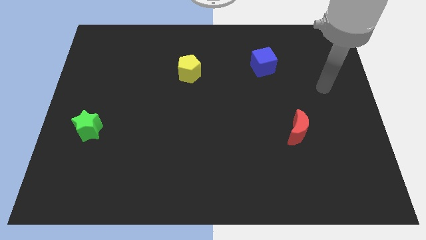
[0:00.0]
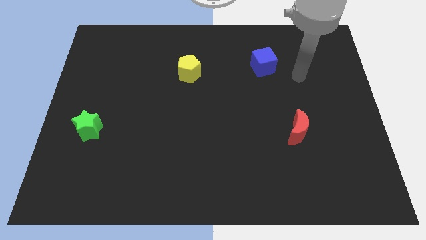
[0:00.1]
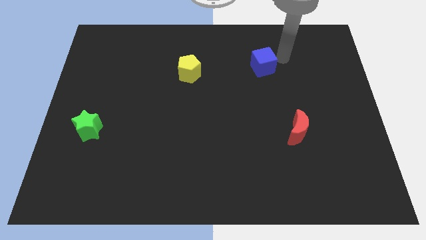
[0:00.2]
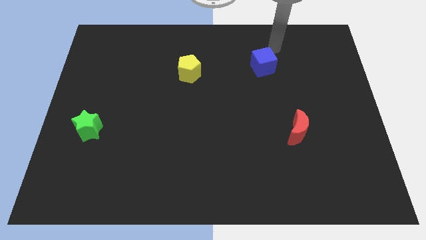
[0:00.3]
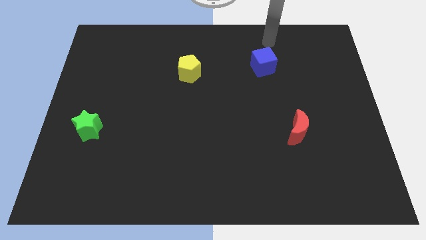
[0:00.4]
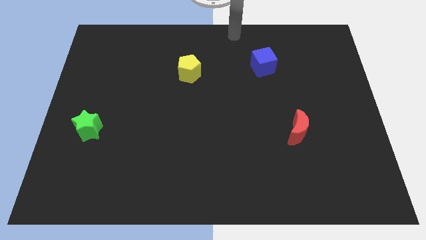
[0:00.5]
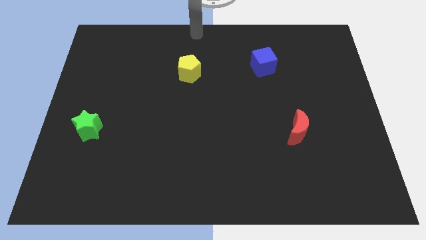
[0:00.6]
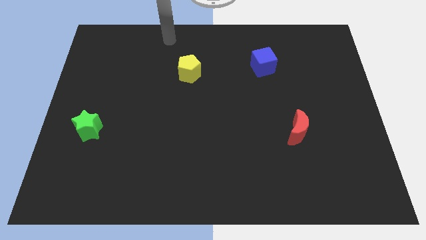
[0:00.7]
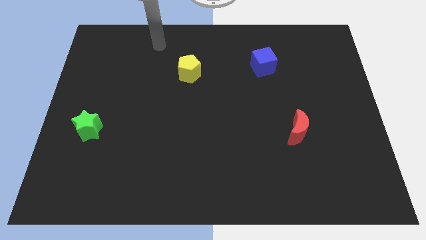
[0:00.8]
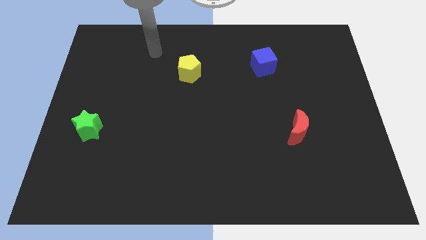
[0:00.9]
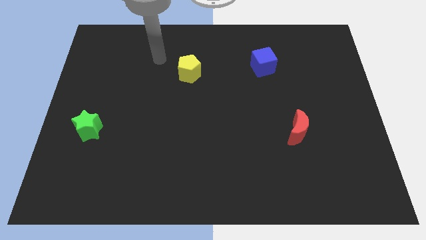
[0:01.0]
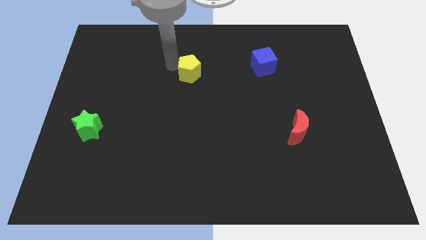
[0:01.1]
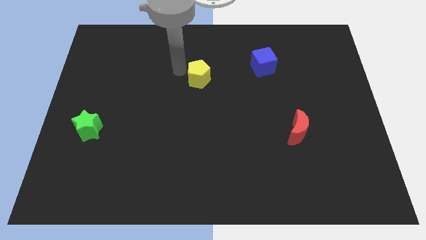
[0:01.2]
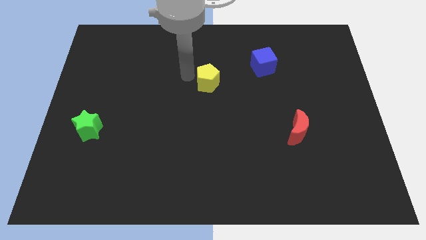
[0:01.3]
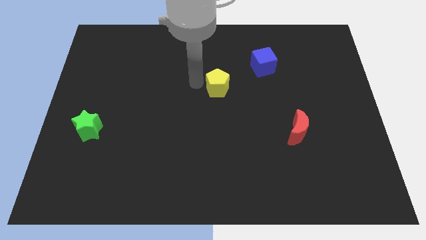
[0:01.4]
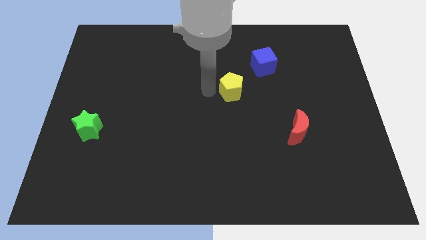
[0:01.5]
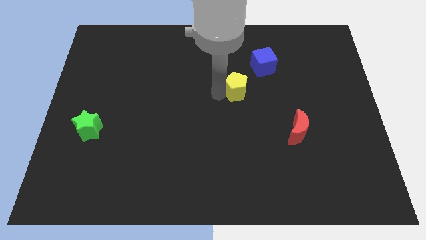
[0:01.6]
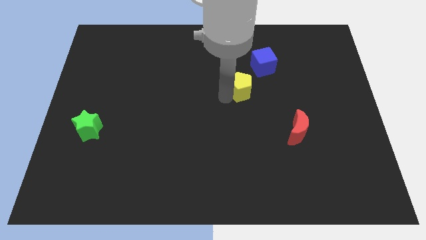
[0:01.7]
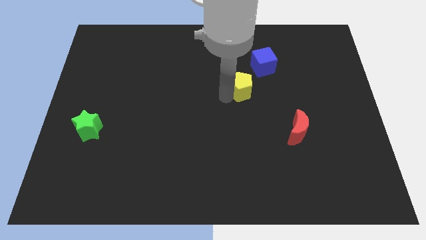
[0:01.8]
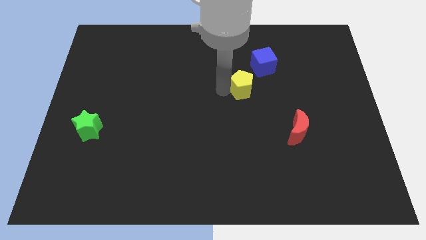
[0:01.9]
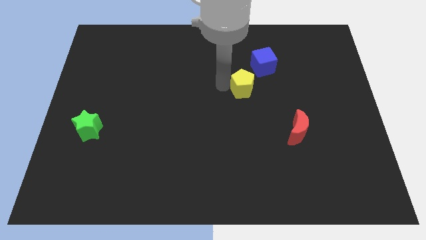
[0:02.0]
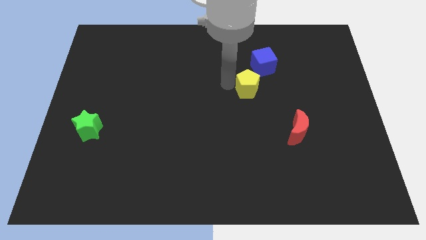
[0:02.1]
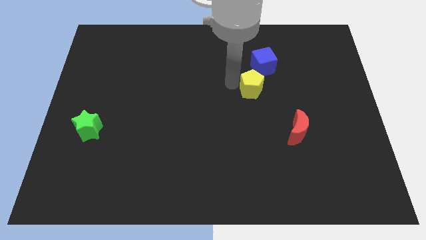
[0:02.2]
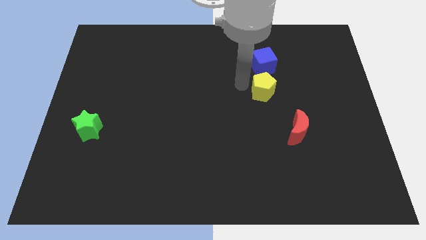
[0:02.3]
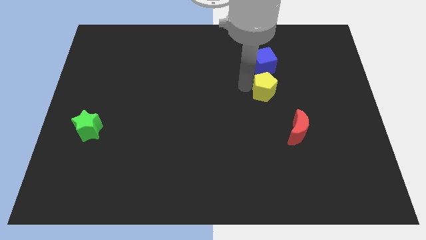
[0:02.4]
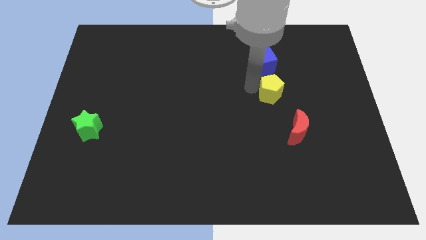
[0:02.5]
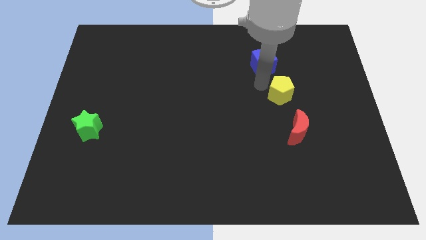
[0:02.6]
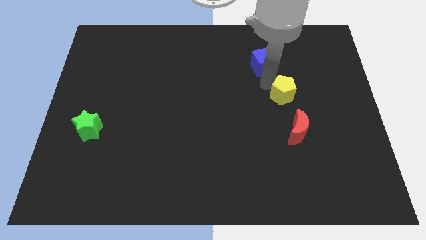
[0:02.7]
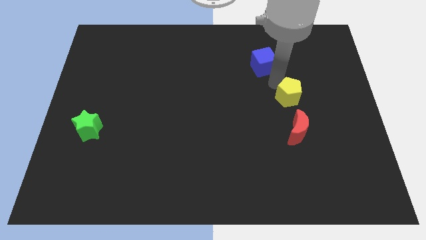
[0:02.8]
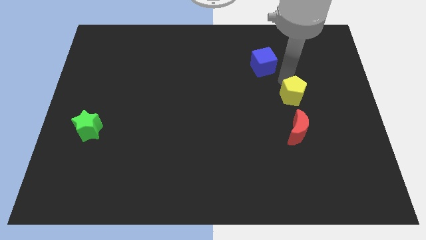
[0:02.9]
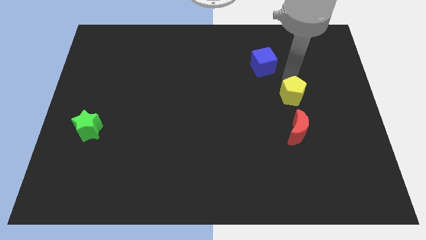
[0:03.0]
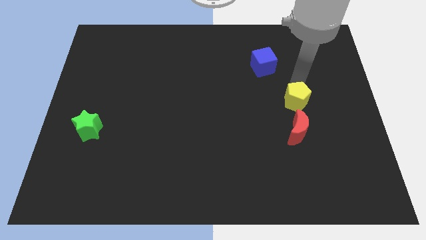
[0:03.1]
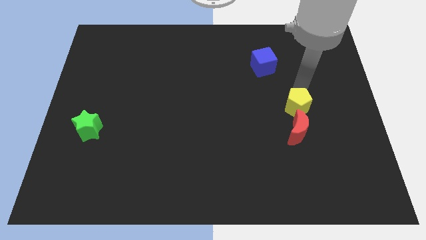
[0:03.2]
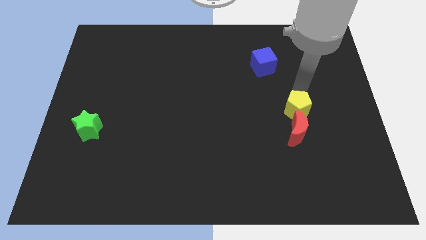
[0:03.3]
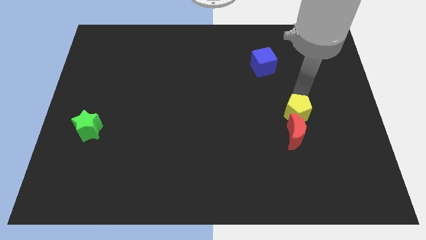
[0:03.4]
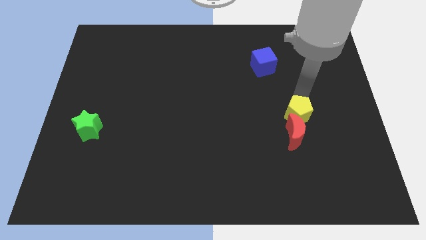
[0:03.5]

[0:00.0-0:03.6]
push the pentagon next to the red block

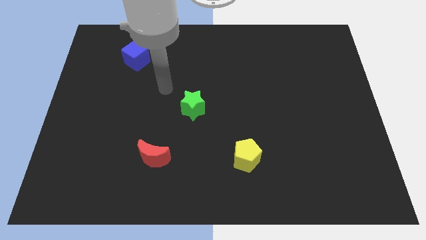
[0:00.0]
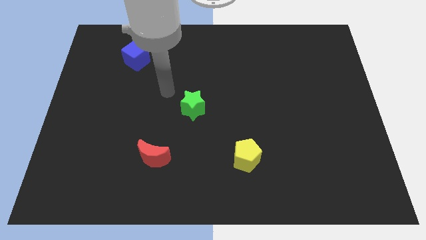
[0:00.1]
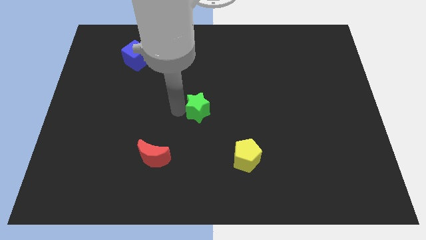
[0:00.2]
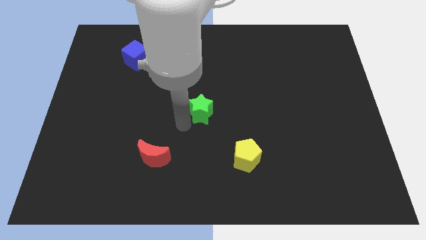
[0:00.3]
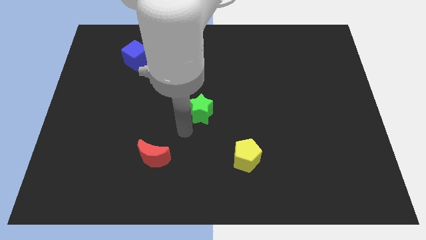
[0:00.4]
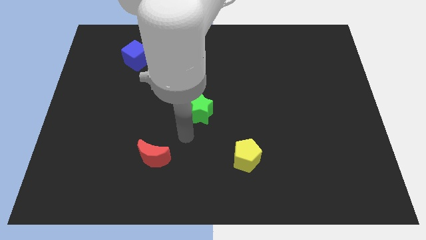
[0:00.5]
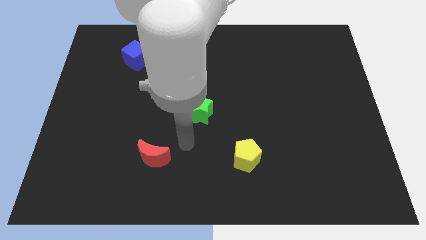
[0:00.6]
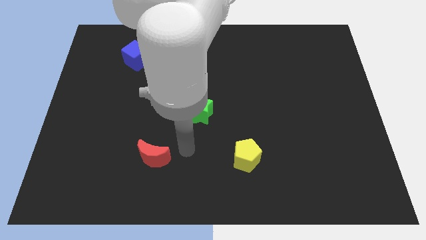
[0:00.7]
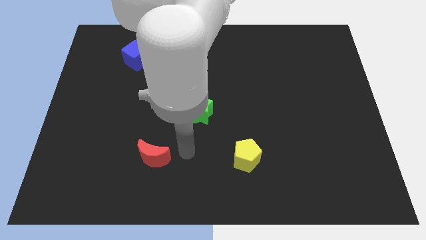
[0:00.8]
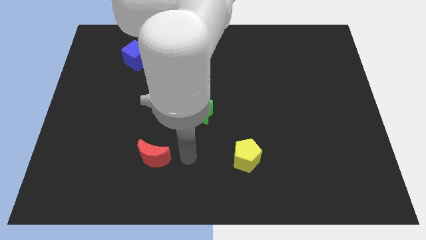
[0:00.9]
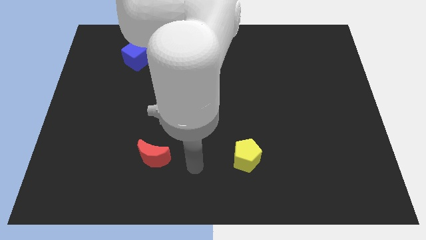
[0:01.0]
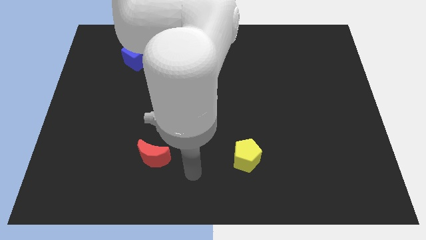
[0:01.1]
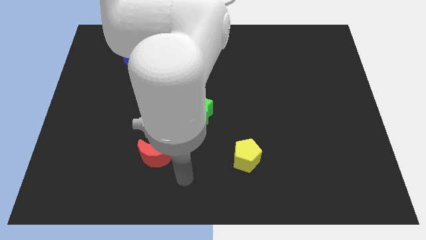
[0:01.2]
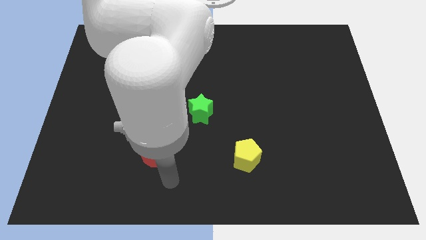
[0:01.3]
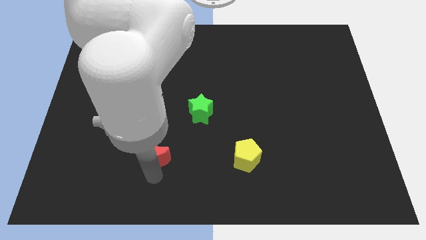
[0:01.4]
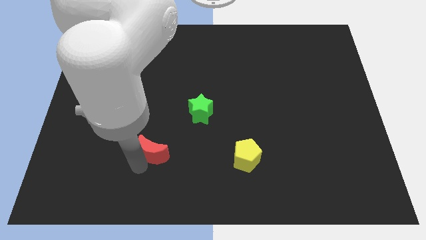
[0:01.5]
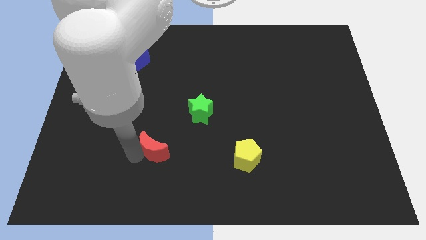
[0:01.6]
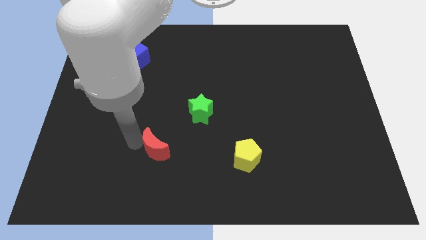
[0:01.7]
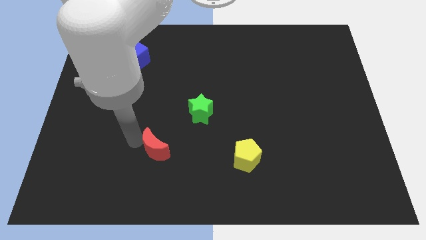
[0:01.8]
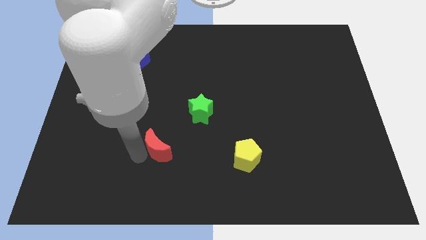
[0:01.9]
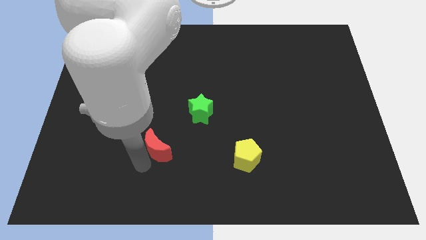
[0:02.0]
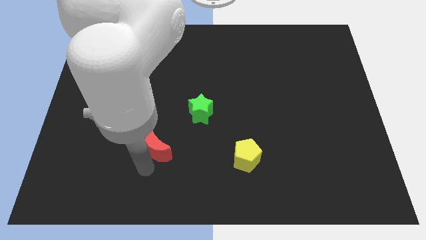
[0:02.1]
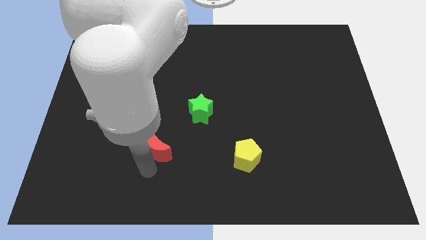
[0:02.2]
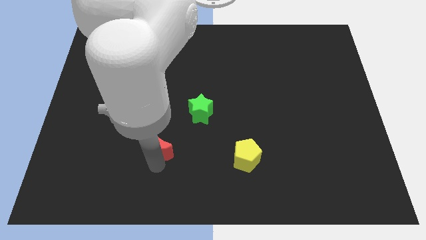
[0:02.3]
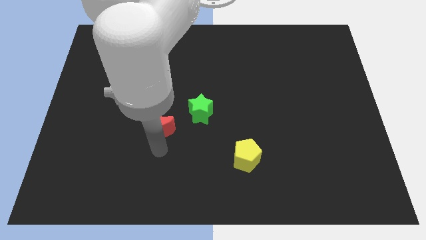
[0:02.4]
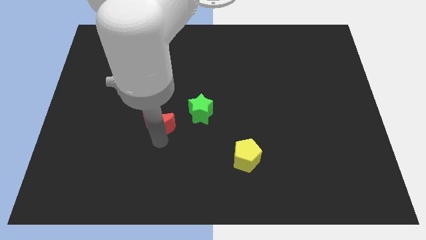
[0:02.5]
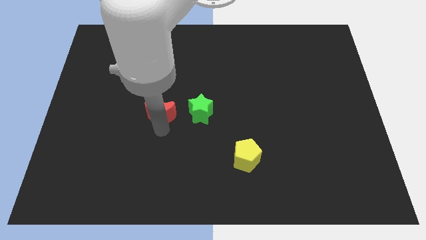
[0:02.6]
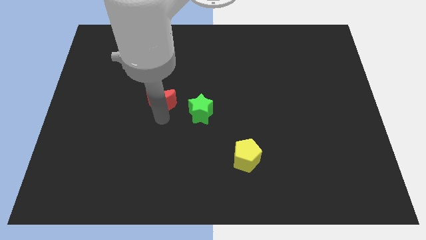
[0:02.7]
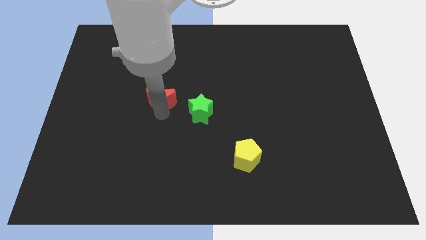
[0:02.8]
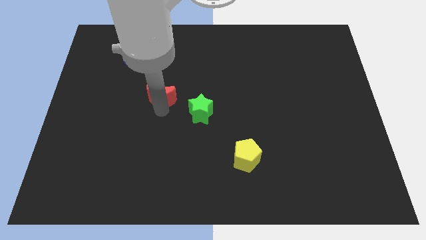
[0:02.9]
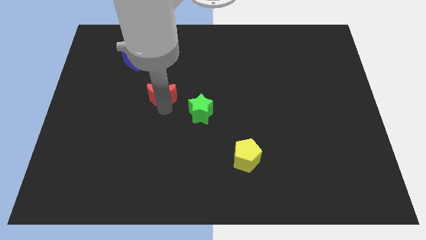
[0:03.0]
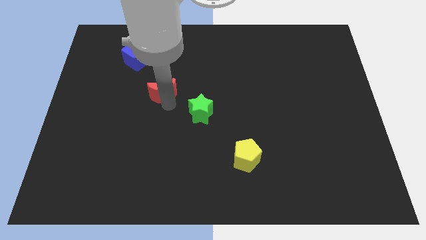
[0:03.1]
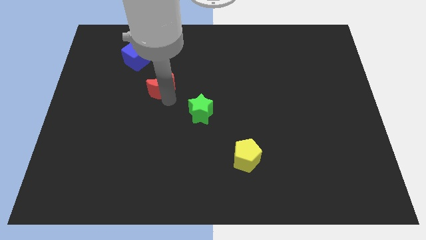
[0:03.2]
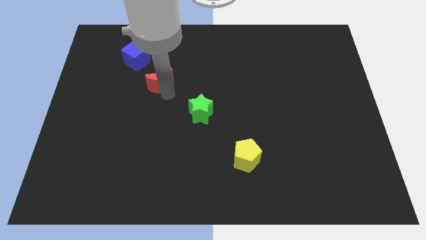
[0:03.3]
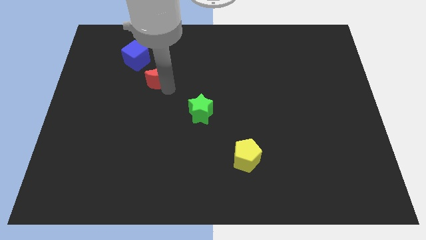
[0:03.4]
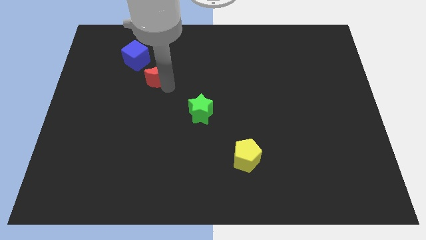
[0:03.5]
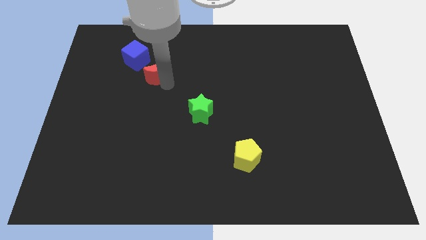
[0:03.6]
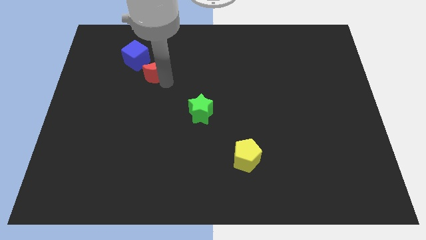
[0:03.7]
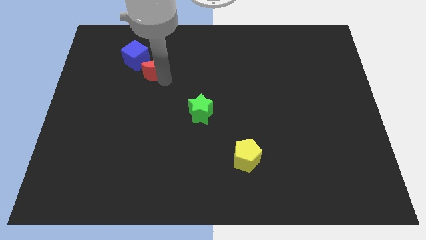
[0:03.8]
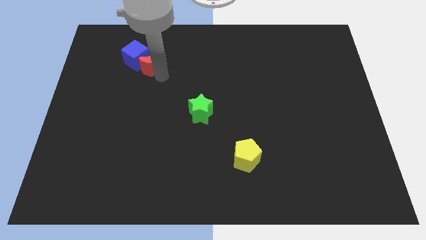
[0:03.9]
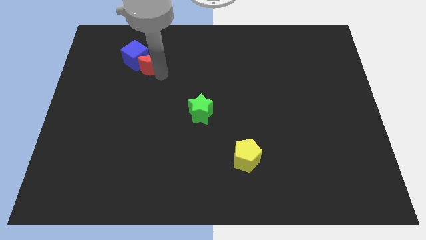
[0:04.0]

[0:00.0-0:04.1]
move the moon close to the cube

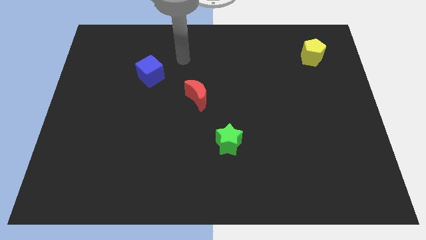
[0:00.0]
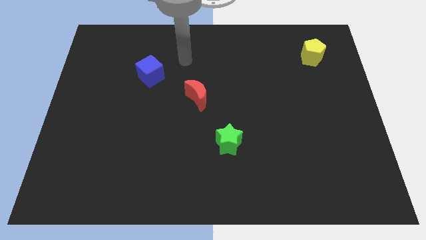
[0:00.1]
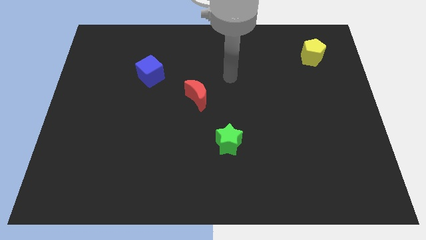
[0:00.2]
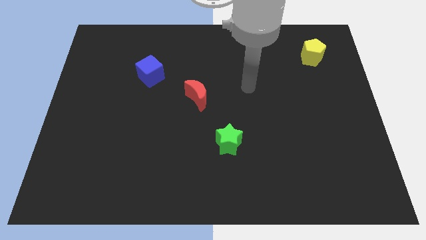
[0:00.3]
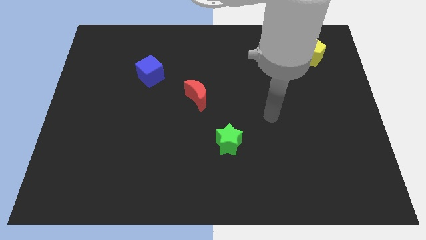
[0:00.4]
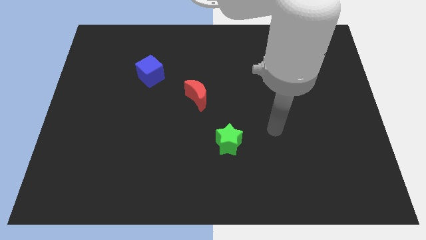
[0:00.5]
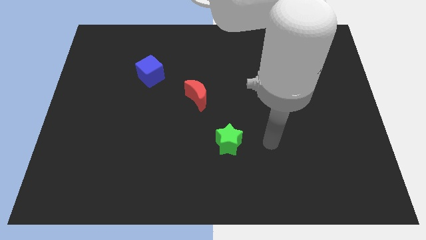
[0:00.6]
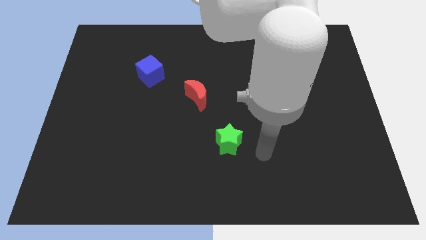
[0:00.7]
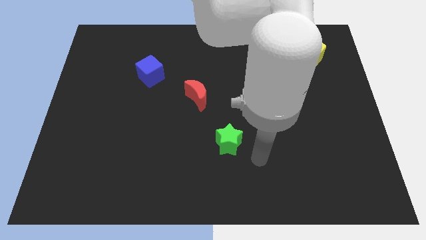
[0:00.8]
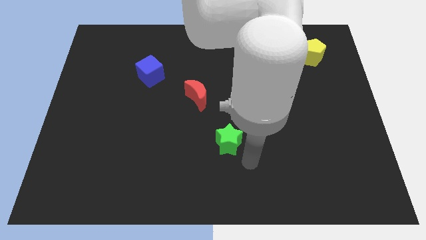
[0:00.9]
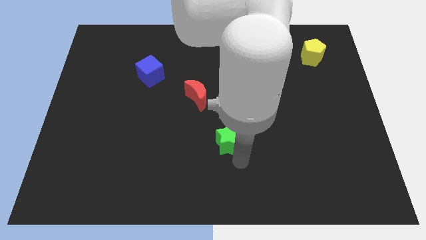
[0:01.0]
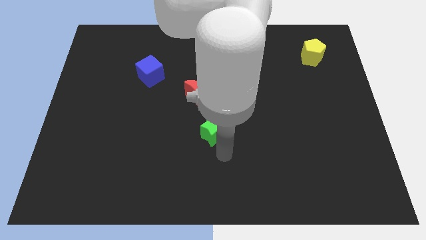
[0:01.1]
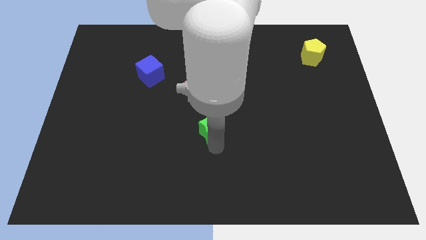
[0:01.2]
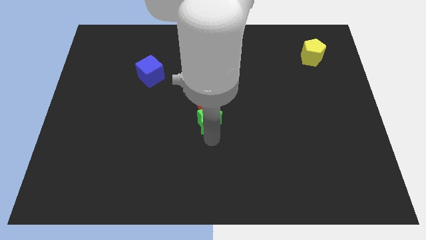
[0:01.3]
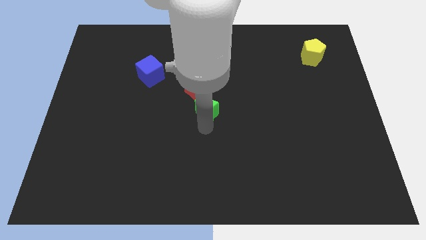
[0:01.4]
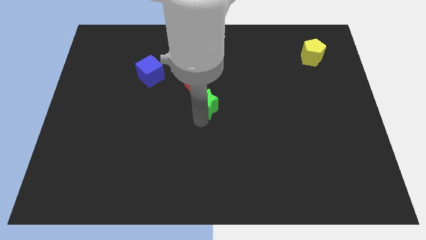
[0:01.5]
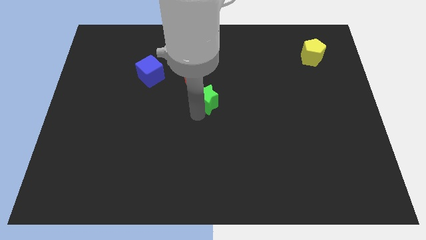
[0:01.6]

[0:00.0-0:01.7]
move the green star close to the red block
